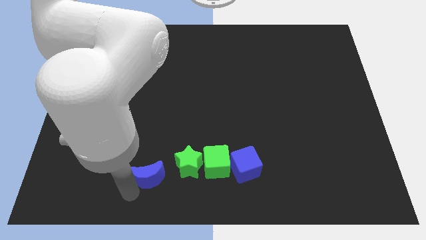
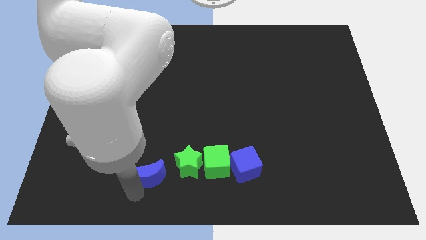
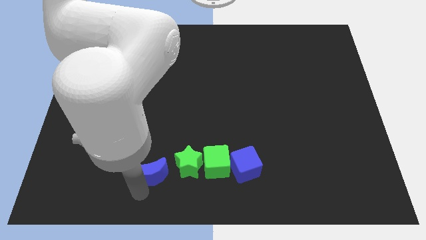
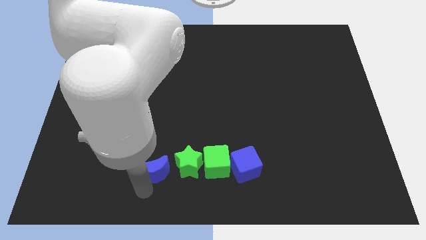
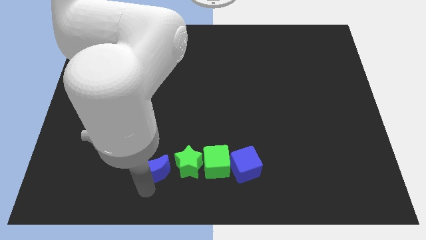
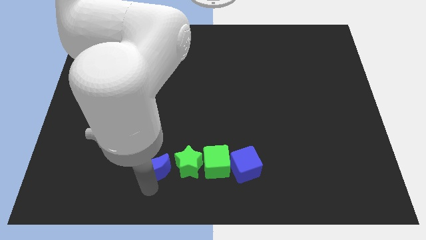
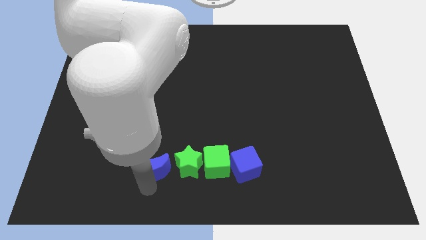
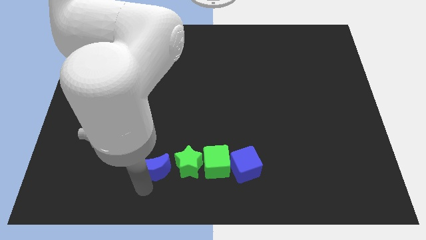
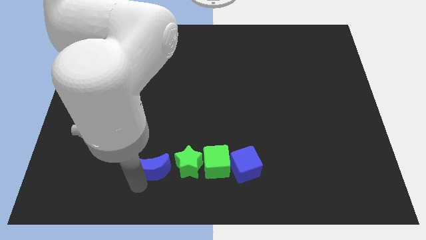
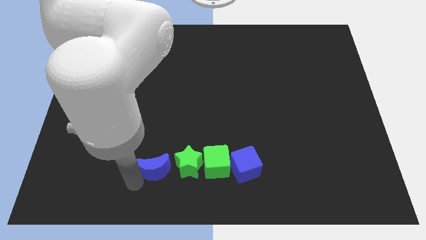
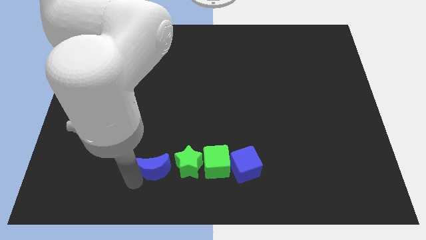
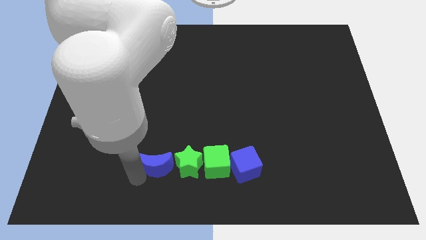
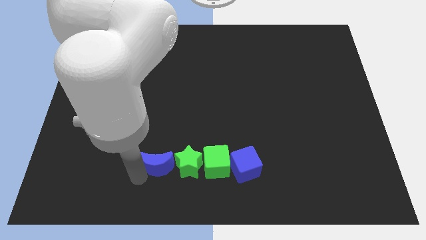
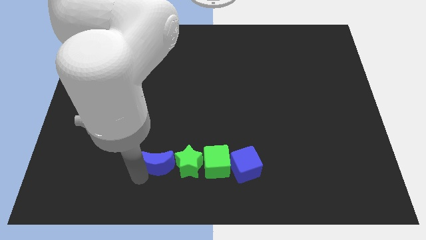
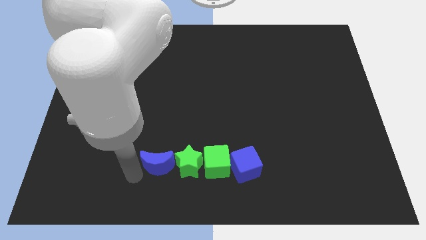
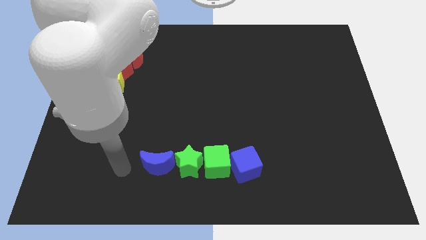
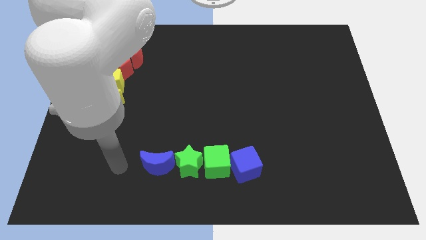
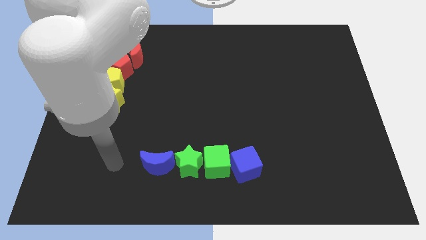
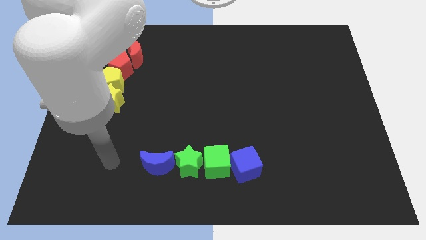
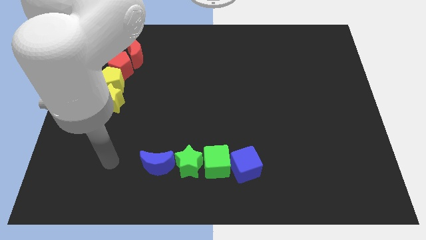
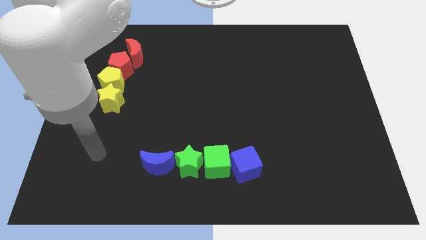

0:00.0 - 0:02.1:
move the blue moon close to the green star

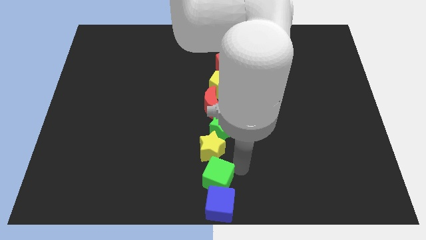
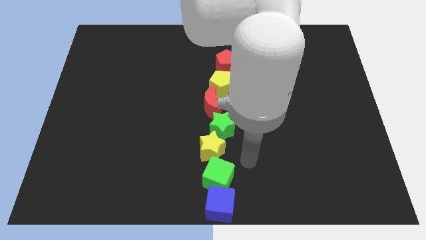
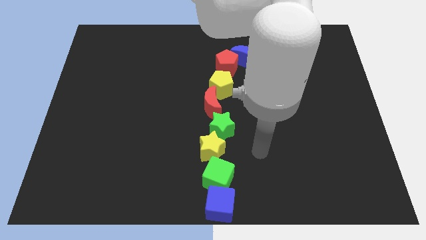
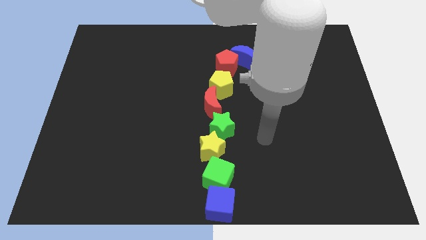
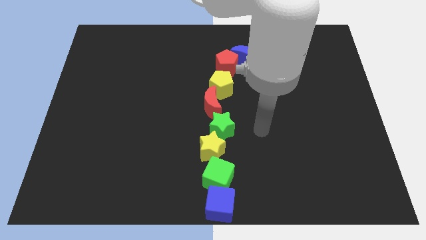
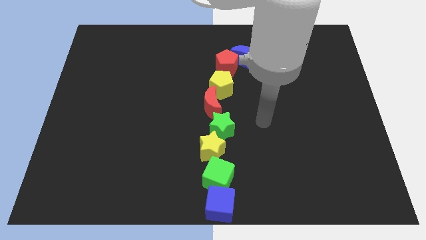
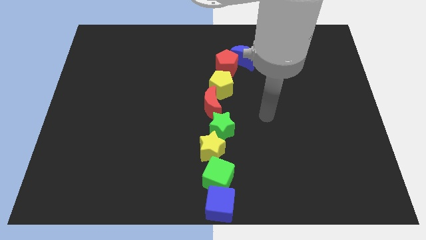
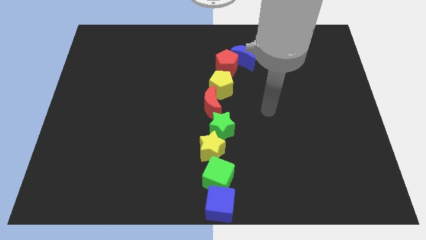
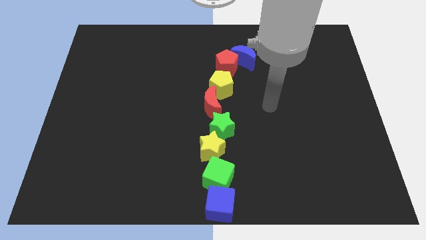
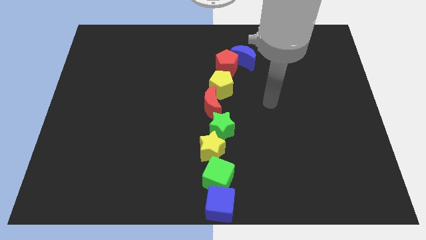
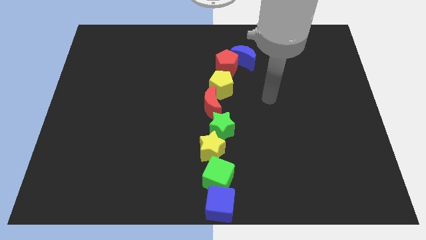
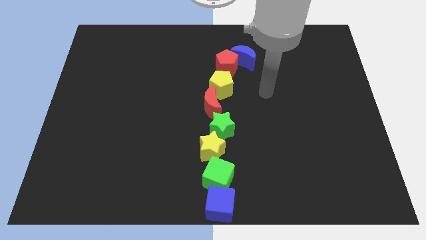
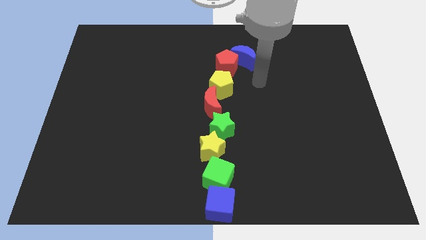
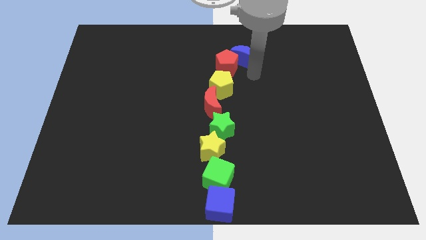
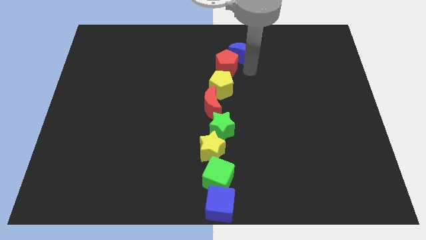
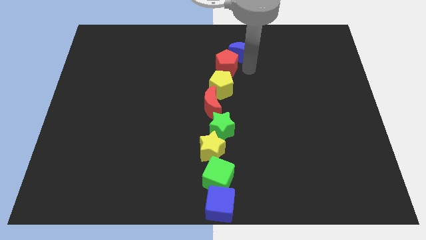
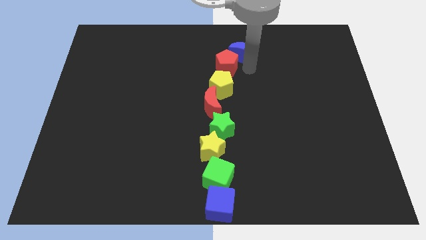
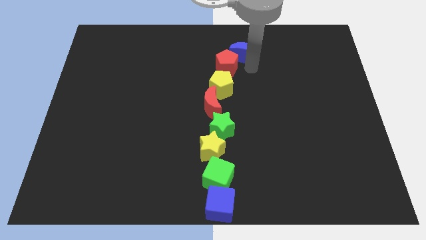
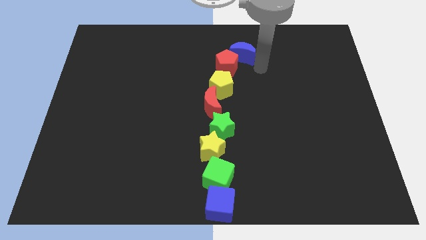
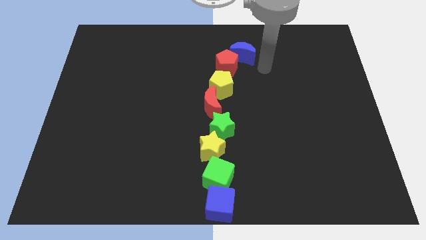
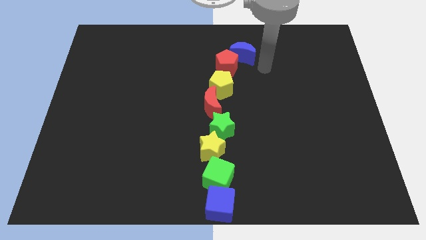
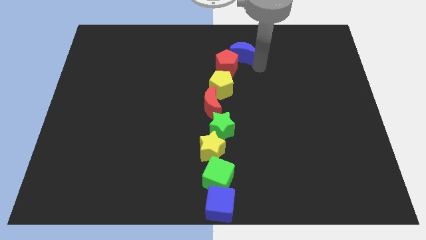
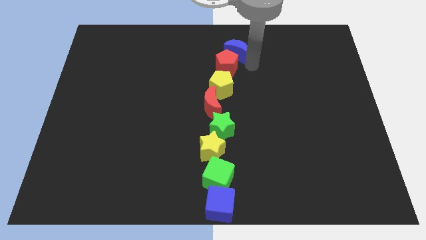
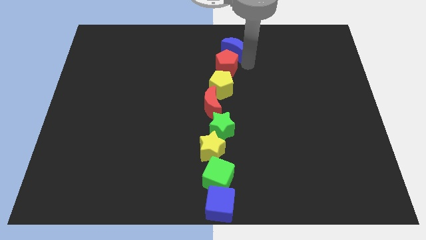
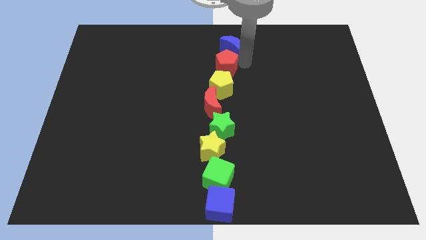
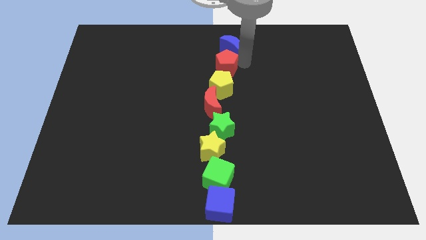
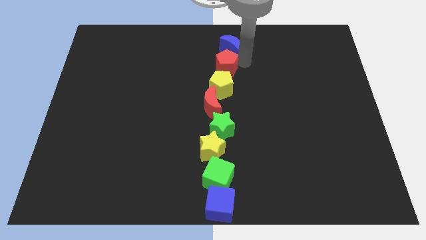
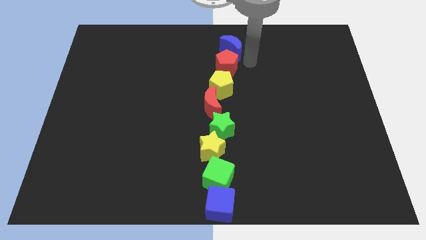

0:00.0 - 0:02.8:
place the blue moon at the top of red pentagon

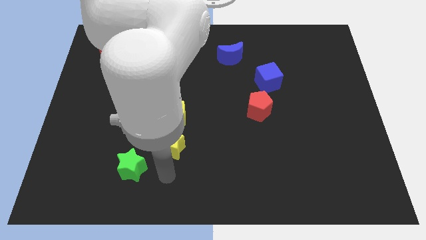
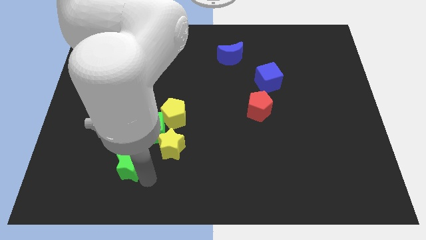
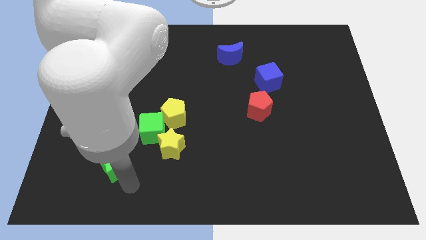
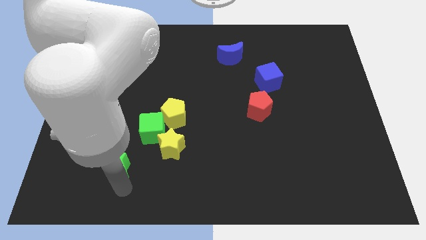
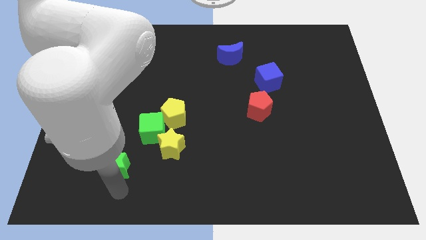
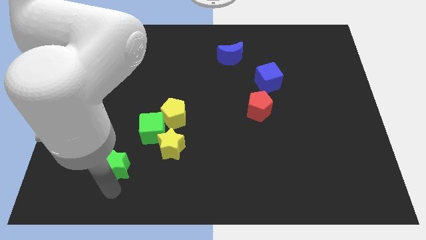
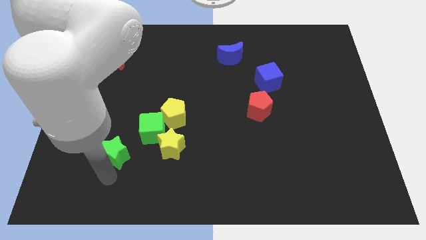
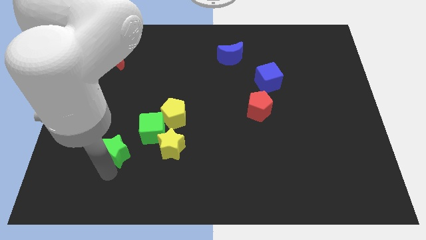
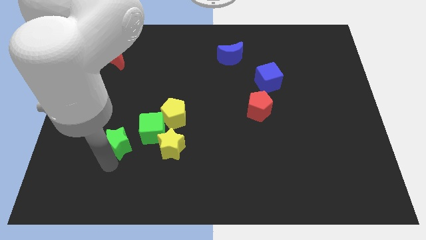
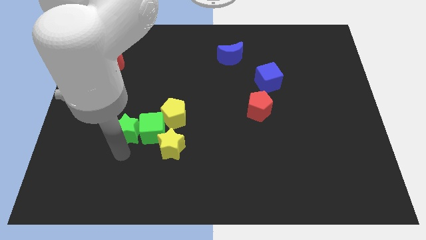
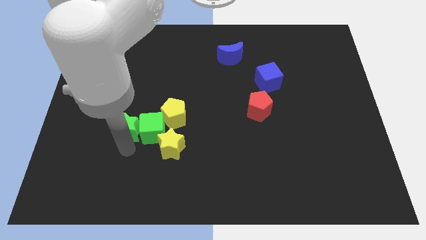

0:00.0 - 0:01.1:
move green star close to green cube

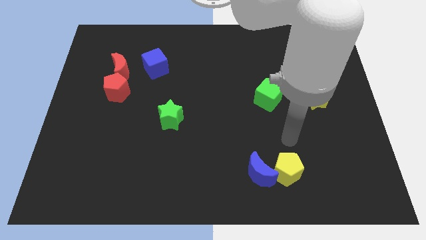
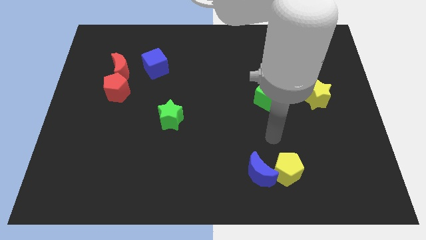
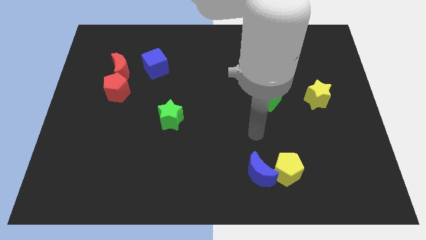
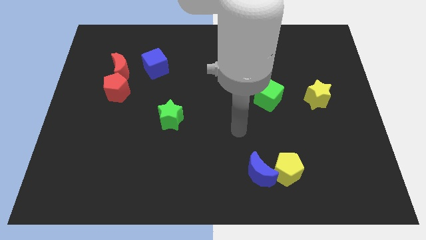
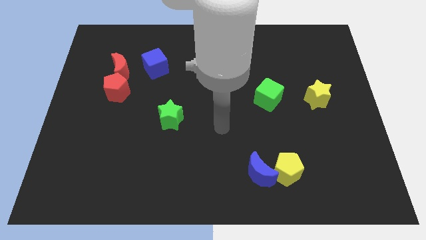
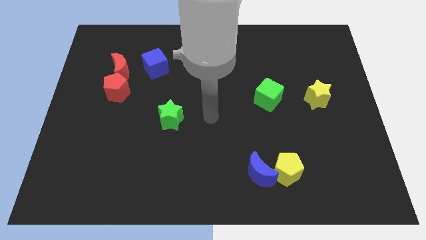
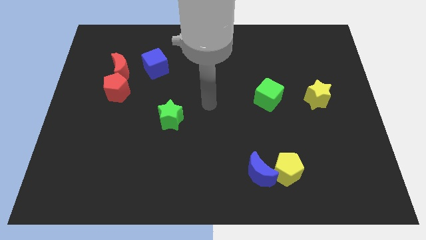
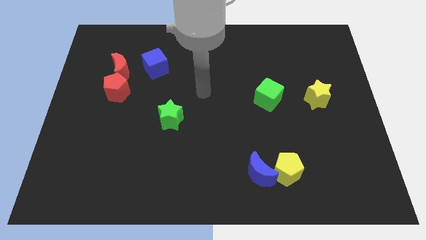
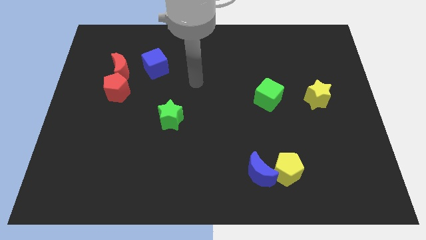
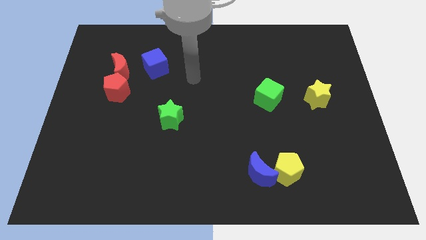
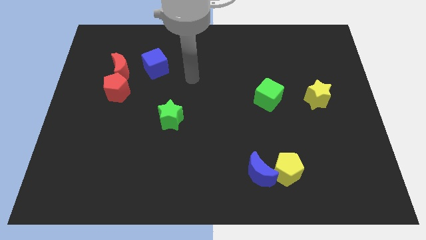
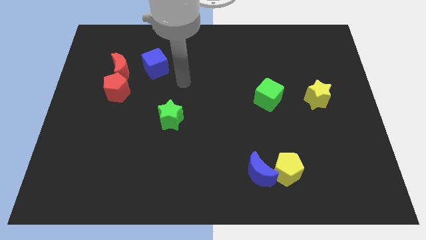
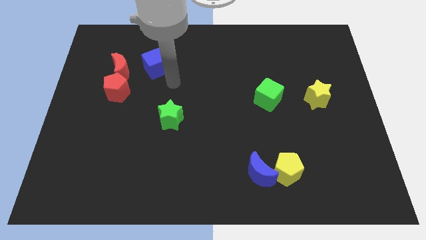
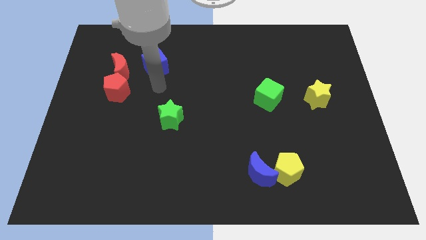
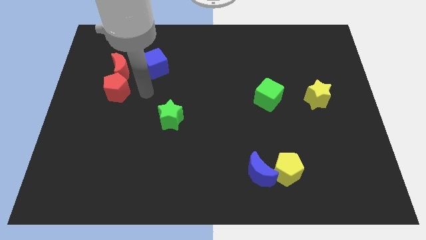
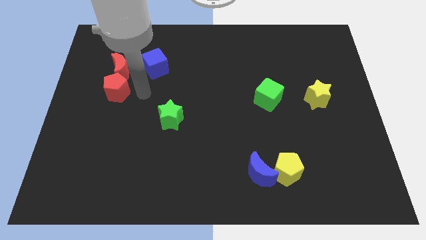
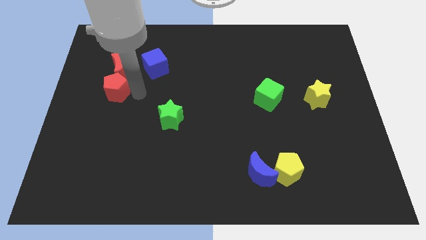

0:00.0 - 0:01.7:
move your hand close to the red pentagon

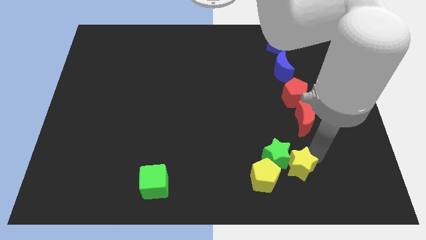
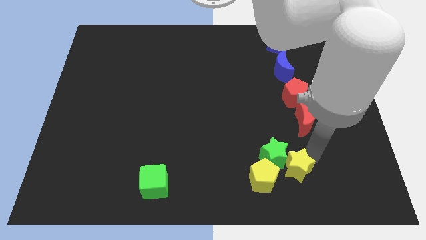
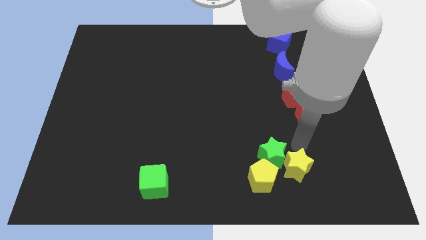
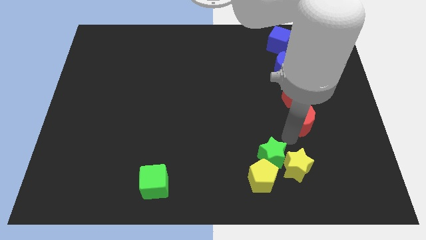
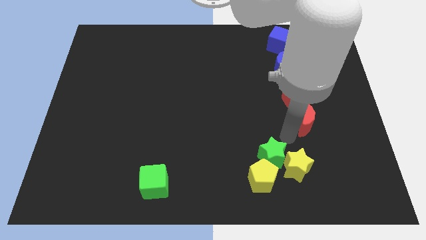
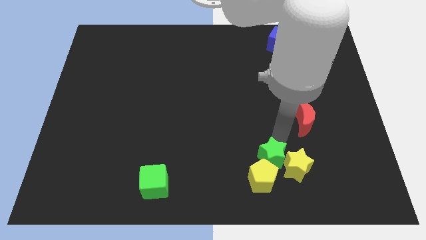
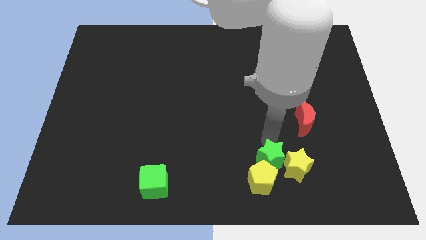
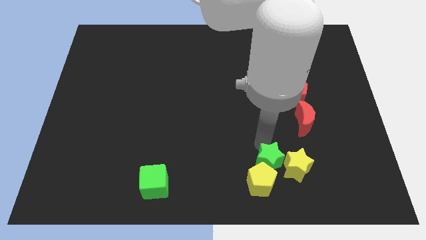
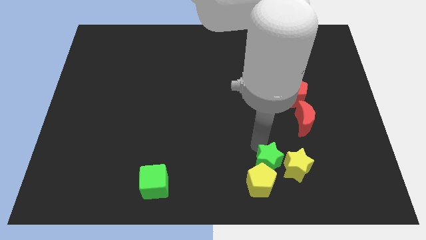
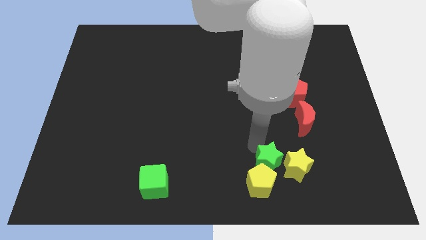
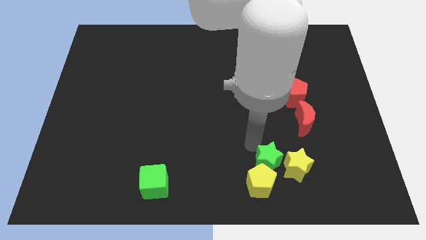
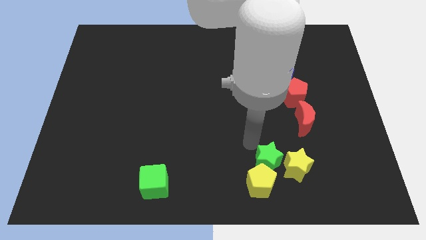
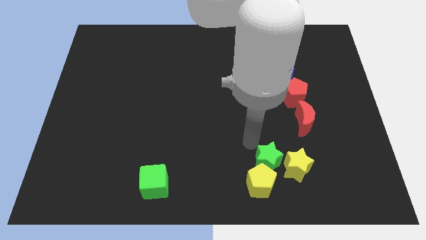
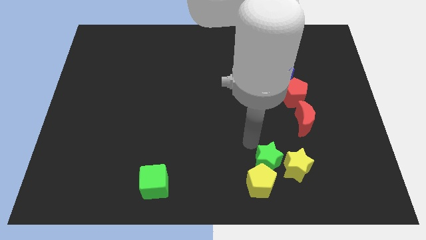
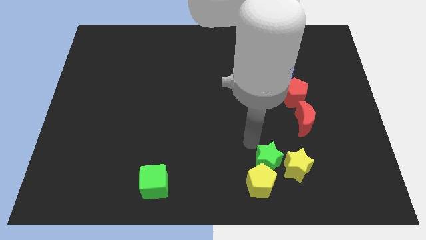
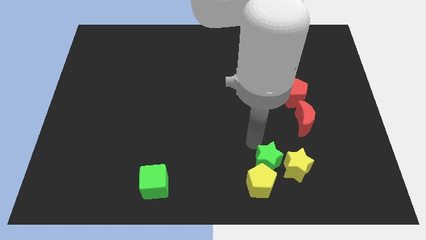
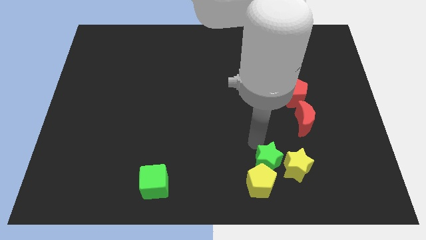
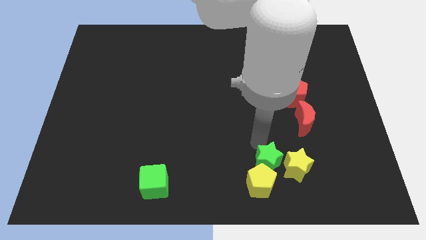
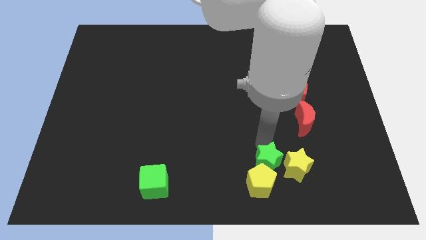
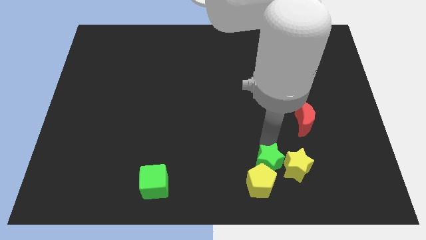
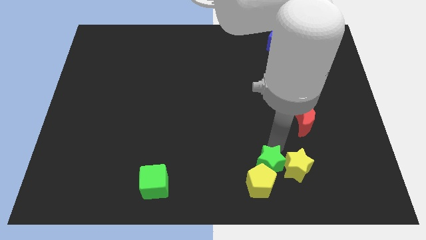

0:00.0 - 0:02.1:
slide the green star and the top right side of the yellow pentagon
